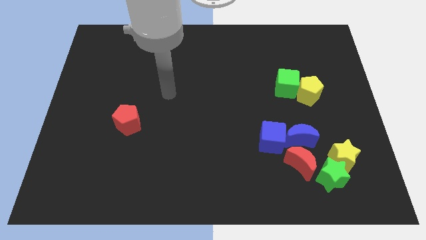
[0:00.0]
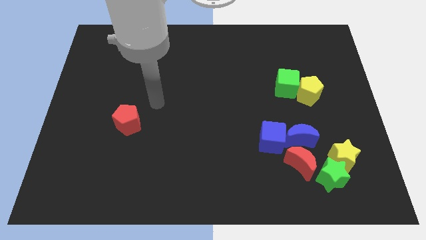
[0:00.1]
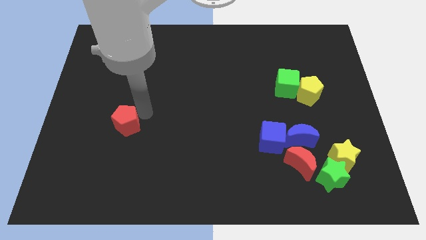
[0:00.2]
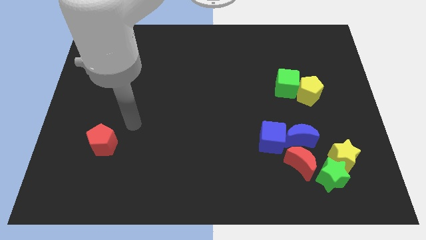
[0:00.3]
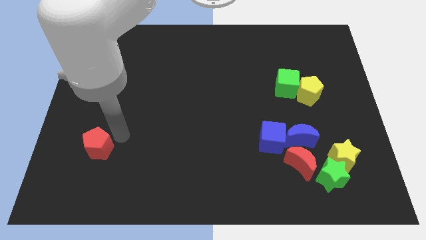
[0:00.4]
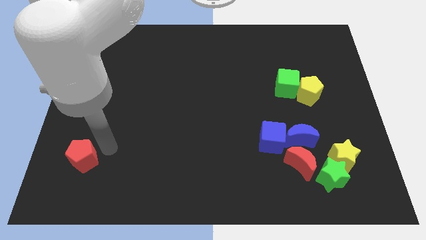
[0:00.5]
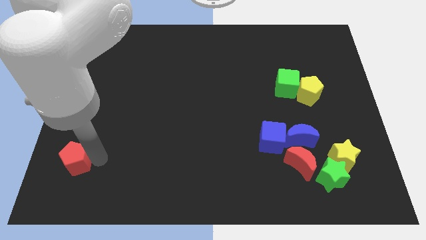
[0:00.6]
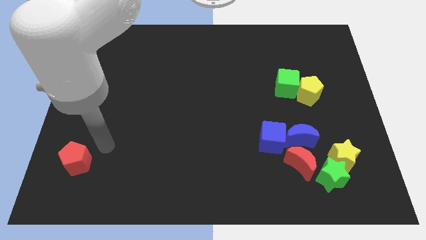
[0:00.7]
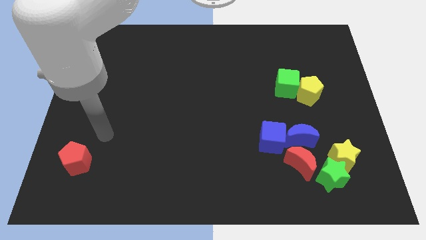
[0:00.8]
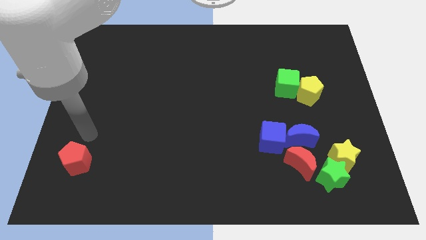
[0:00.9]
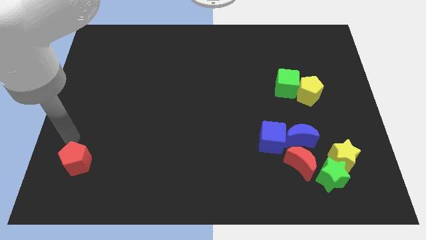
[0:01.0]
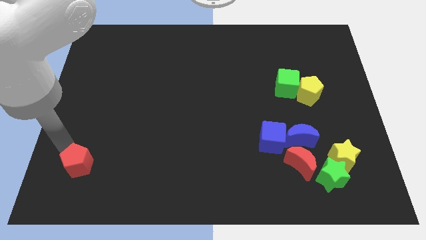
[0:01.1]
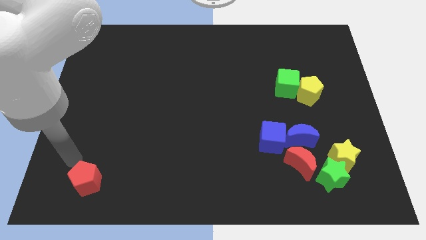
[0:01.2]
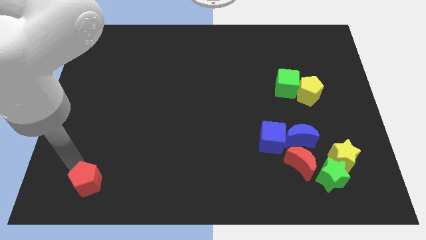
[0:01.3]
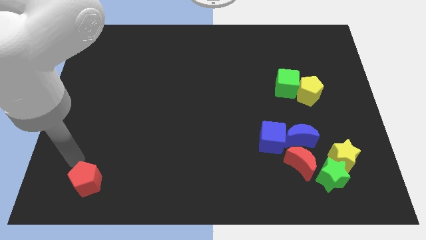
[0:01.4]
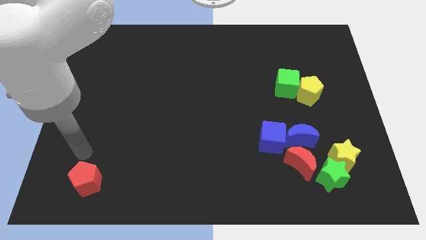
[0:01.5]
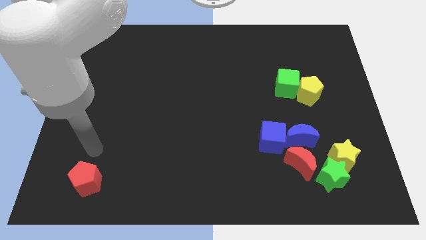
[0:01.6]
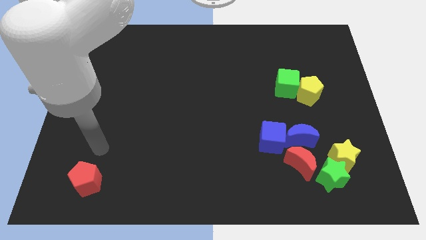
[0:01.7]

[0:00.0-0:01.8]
move the red pentagon towards bottom left

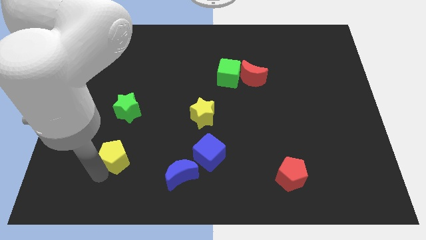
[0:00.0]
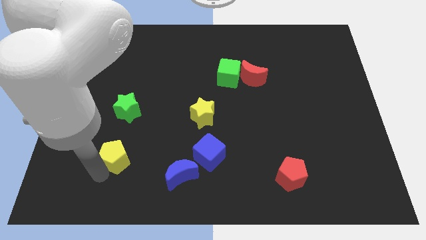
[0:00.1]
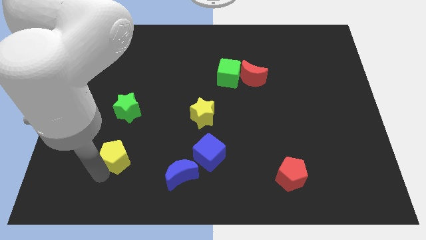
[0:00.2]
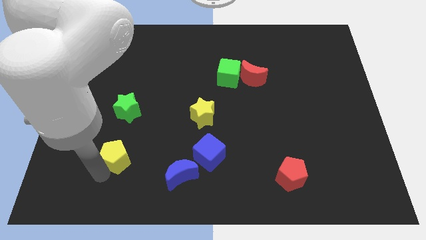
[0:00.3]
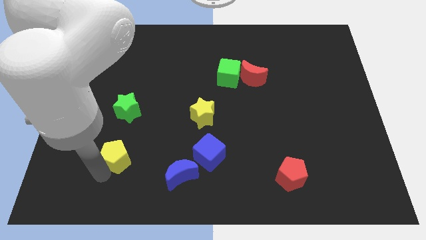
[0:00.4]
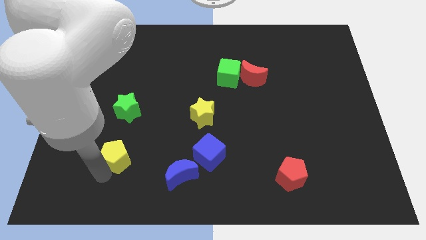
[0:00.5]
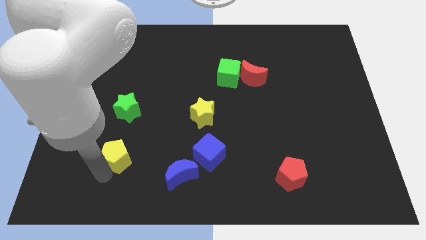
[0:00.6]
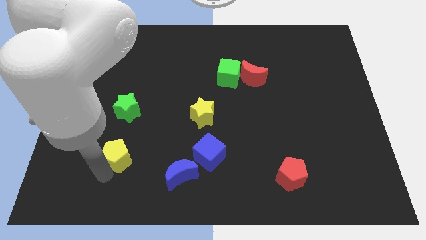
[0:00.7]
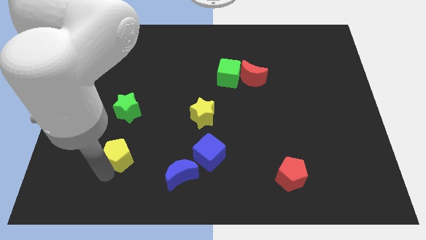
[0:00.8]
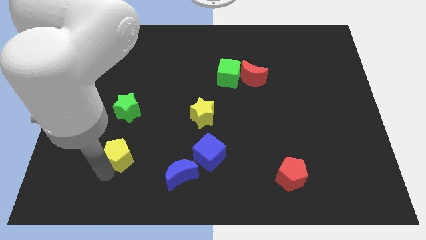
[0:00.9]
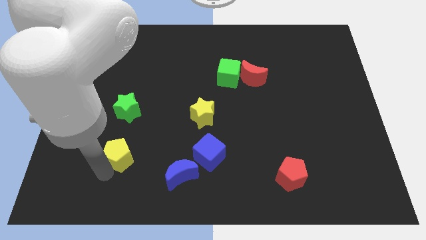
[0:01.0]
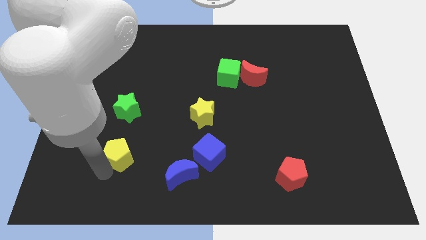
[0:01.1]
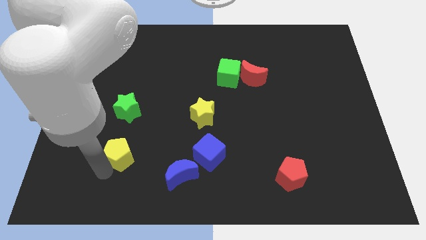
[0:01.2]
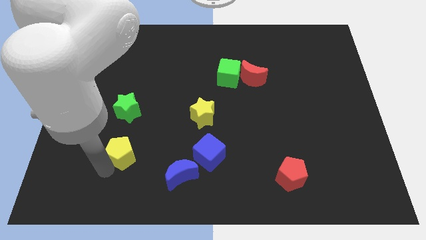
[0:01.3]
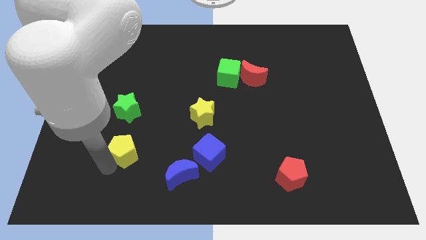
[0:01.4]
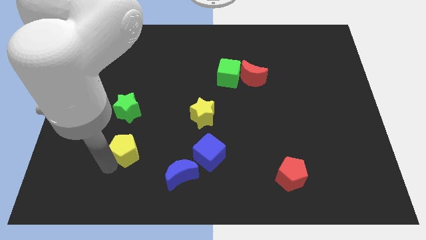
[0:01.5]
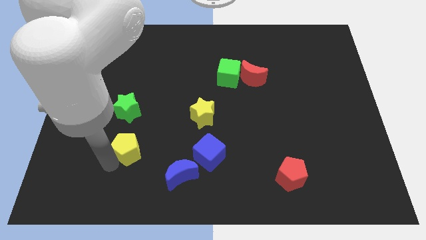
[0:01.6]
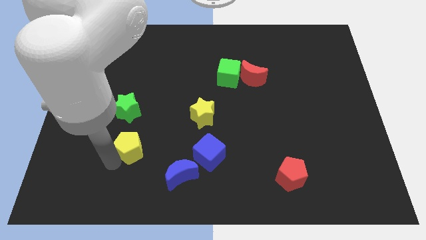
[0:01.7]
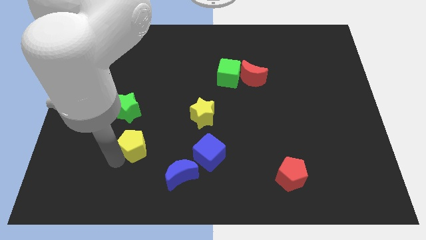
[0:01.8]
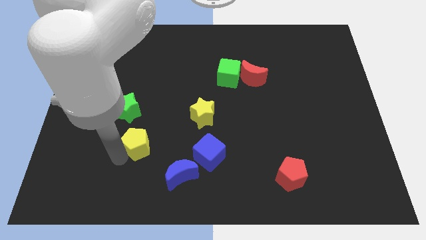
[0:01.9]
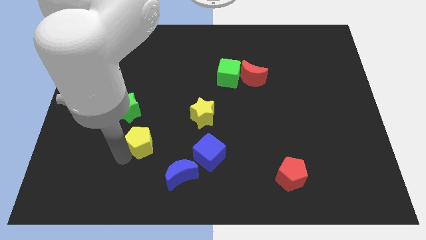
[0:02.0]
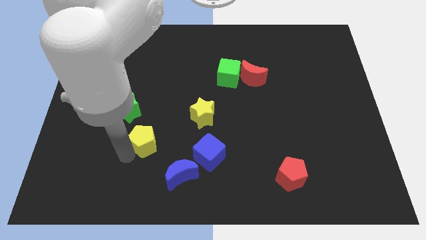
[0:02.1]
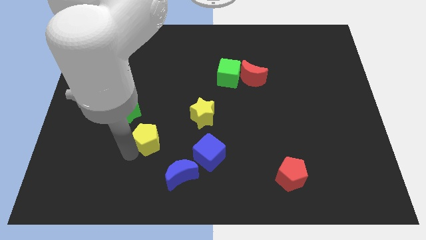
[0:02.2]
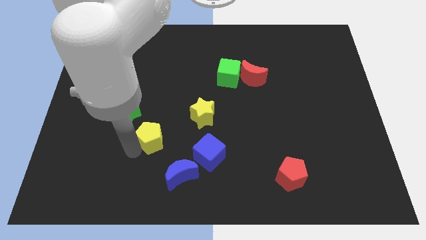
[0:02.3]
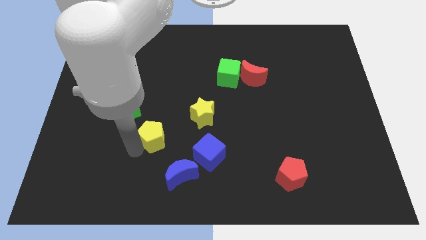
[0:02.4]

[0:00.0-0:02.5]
place the yellow pentagon in between blue moon and green star diagonally

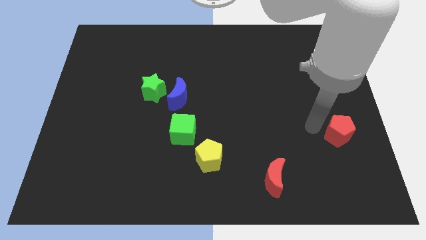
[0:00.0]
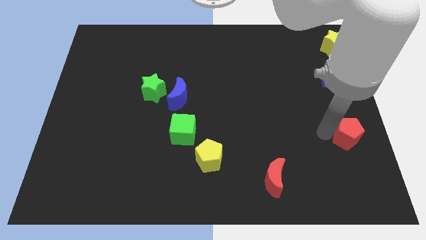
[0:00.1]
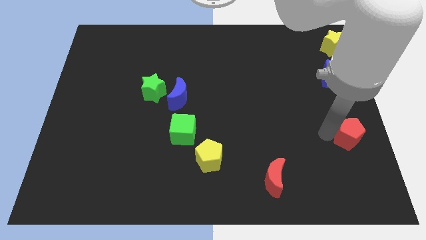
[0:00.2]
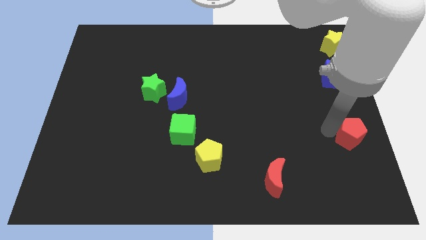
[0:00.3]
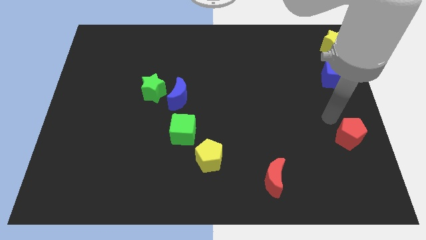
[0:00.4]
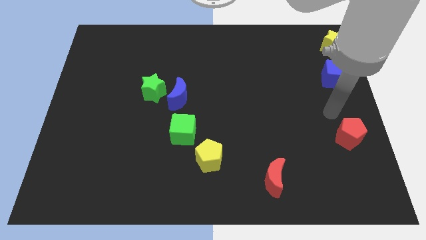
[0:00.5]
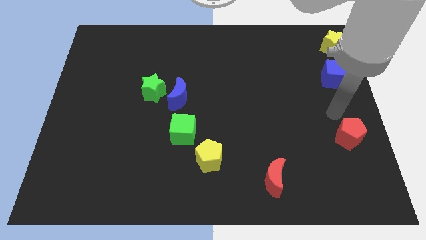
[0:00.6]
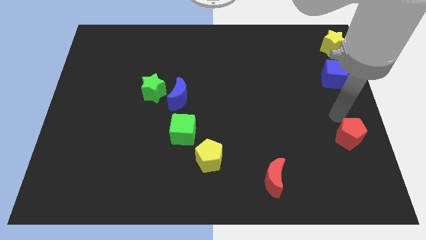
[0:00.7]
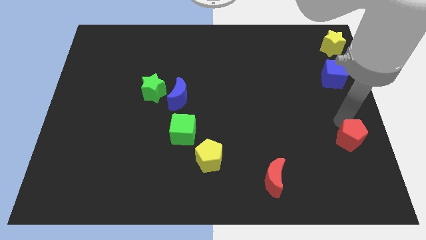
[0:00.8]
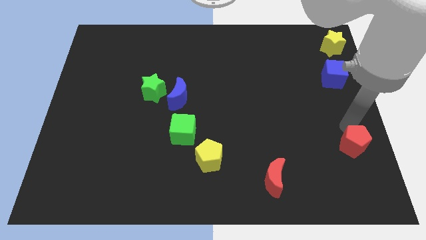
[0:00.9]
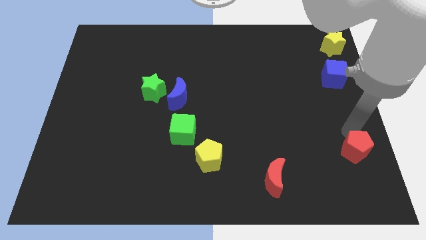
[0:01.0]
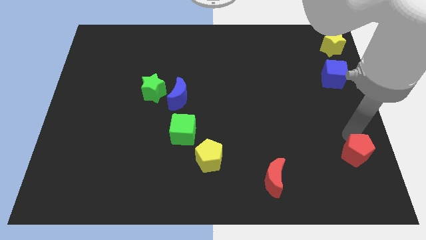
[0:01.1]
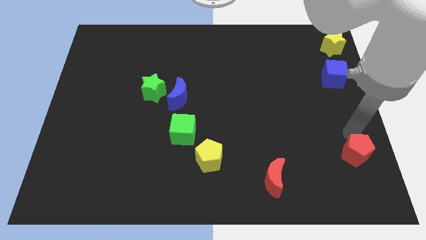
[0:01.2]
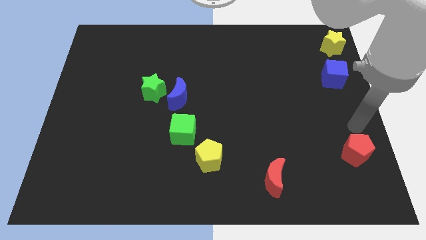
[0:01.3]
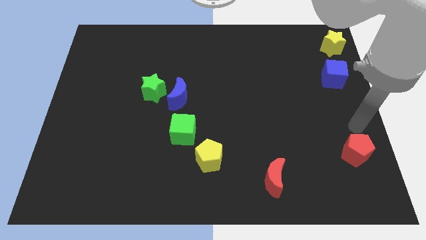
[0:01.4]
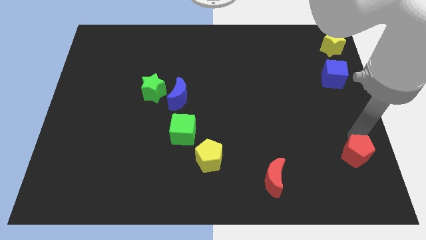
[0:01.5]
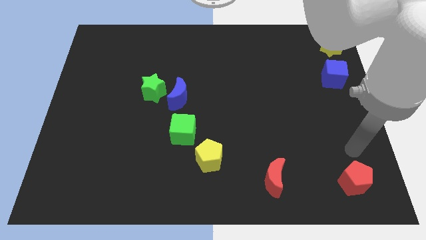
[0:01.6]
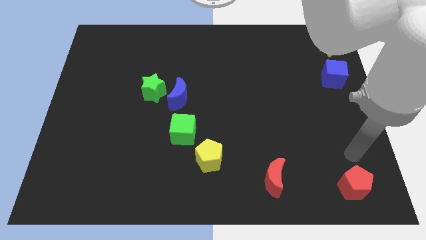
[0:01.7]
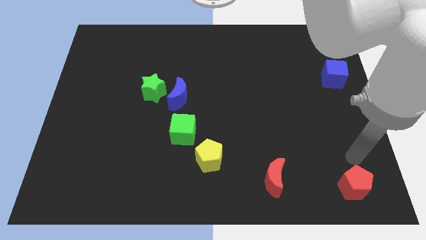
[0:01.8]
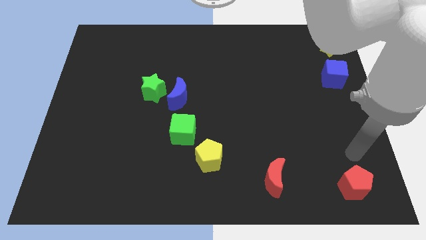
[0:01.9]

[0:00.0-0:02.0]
move red moon to the bottom right side of the board

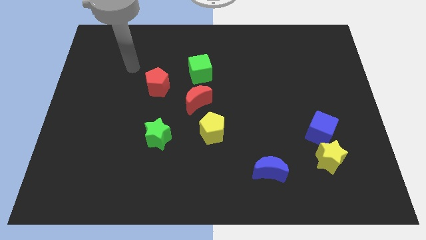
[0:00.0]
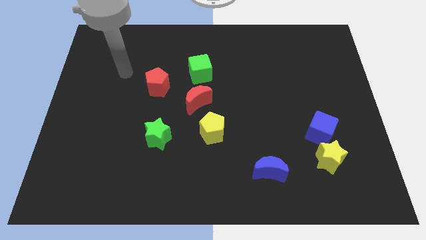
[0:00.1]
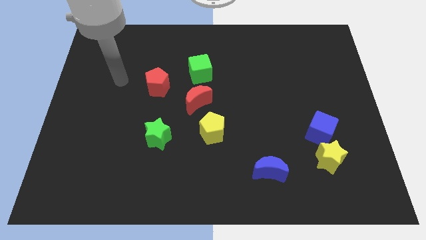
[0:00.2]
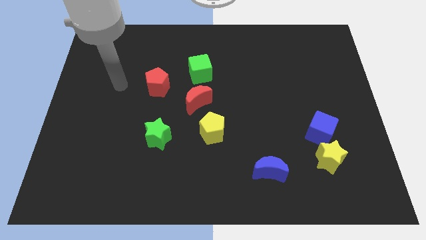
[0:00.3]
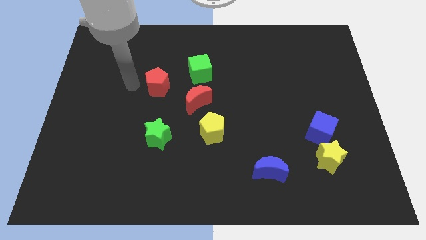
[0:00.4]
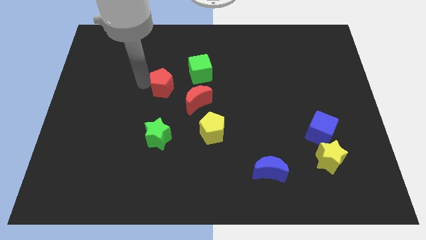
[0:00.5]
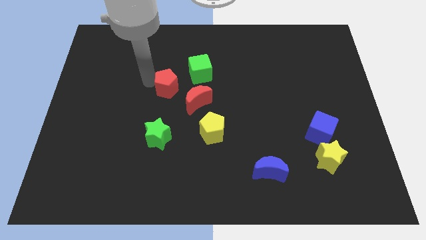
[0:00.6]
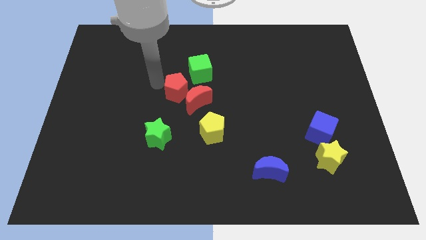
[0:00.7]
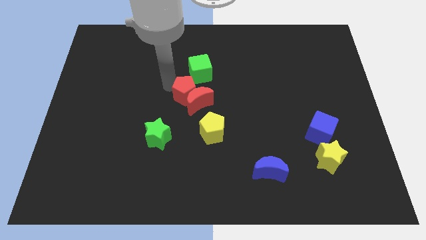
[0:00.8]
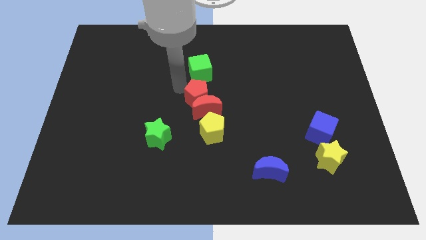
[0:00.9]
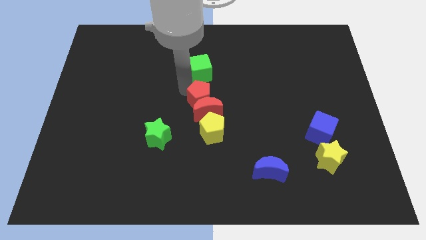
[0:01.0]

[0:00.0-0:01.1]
push the red pentagon into the red moon

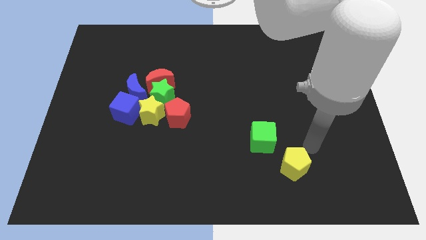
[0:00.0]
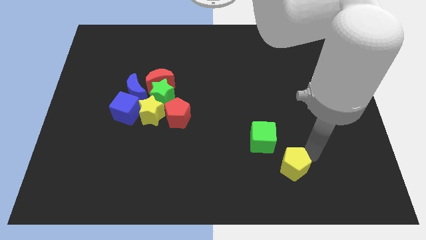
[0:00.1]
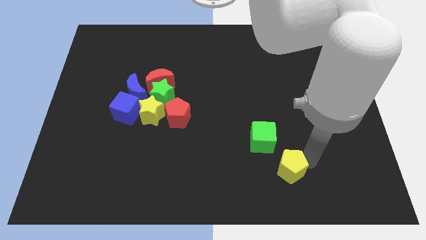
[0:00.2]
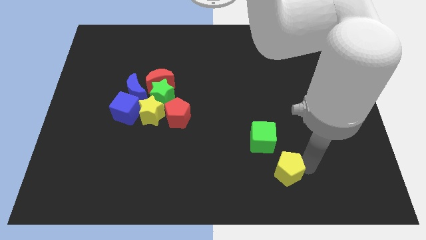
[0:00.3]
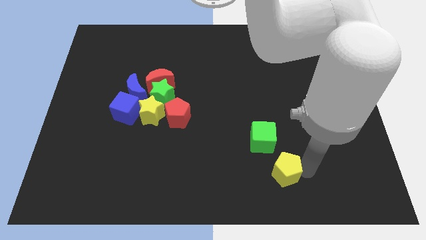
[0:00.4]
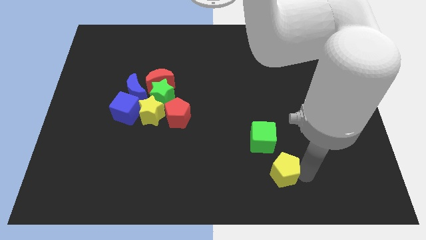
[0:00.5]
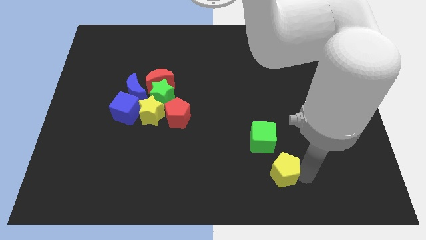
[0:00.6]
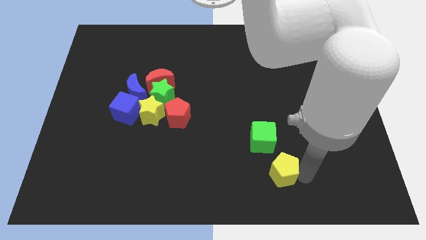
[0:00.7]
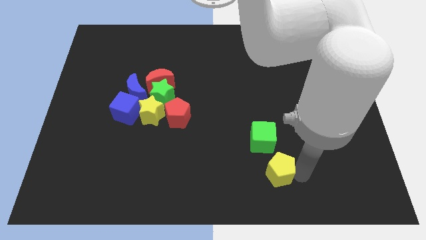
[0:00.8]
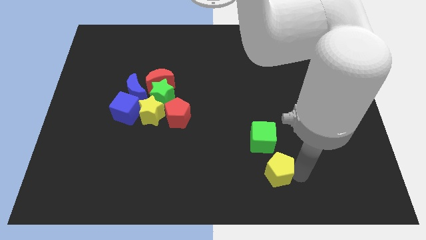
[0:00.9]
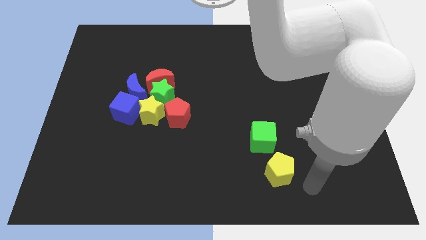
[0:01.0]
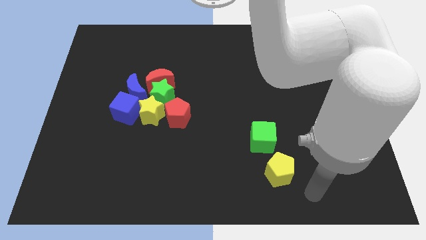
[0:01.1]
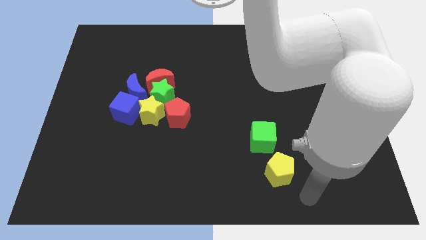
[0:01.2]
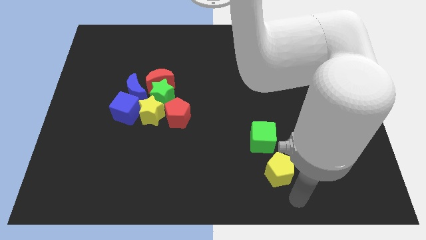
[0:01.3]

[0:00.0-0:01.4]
slightly move the yellow pentagon to the left

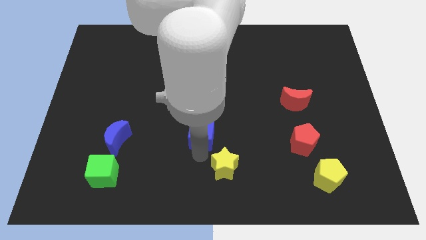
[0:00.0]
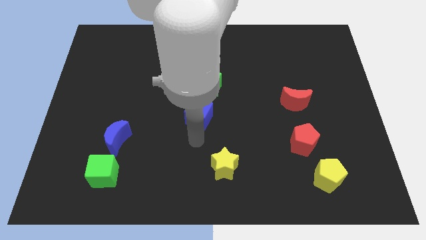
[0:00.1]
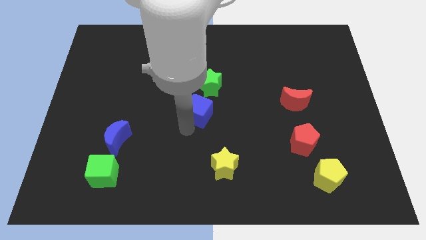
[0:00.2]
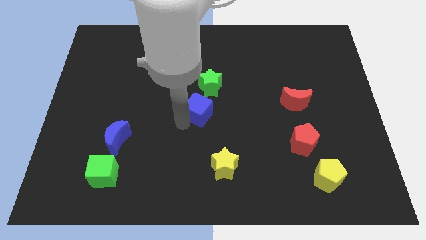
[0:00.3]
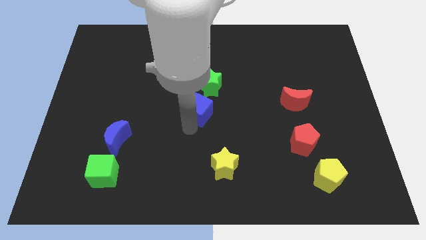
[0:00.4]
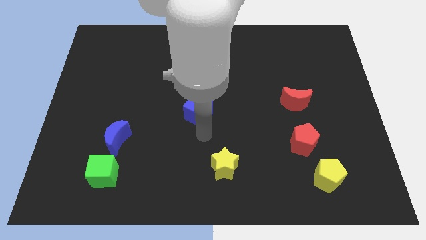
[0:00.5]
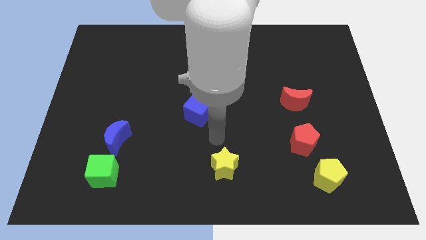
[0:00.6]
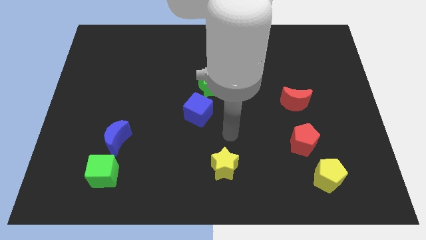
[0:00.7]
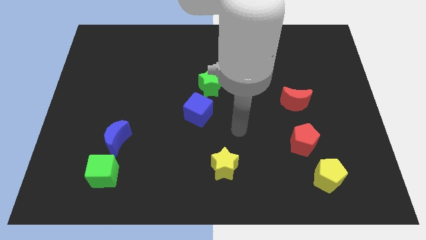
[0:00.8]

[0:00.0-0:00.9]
put the blue cube at the bottom left side of the green star
